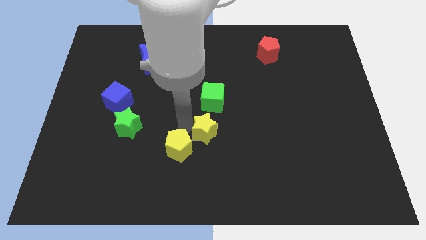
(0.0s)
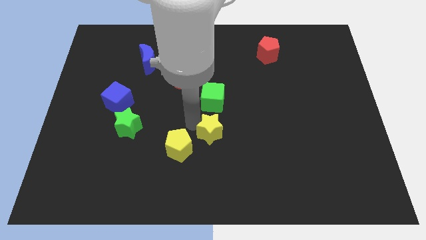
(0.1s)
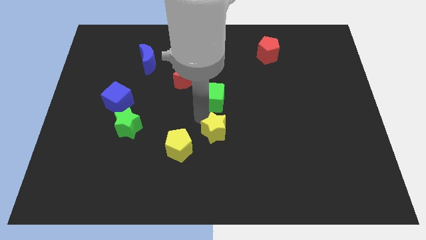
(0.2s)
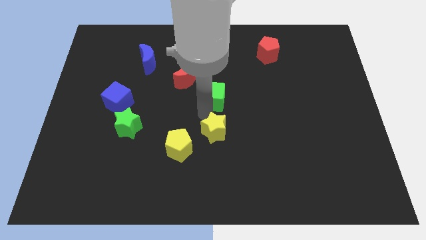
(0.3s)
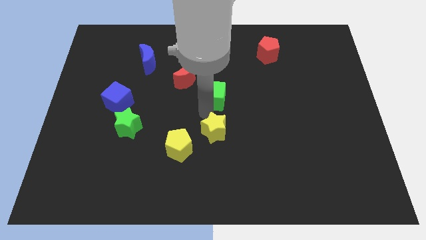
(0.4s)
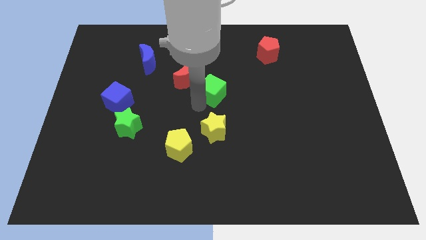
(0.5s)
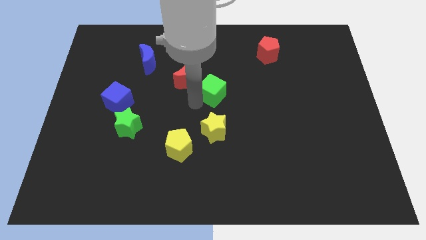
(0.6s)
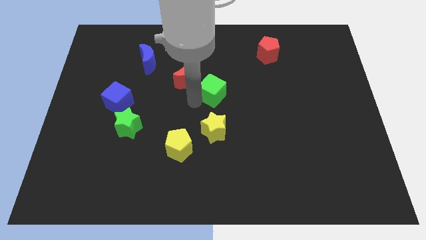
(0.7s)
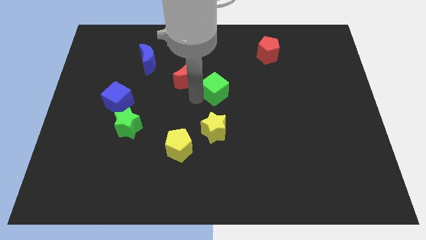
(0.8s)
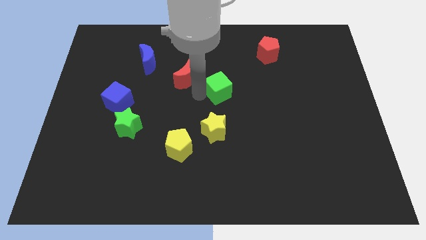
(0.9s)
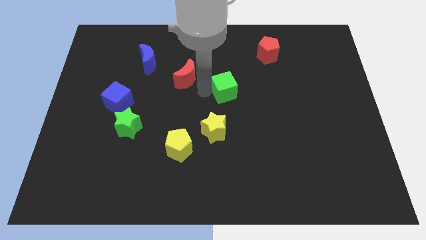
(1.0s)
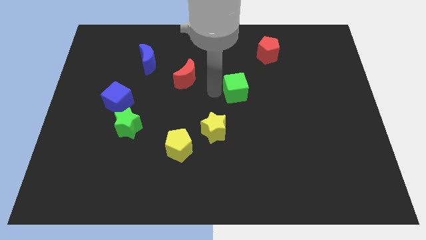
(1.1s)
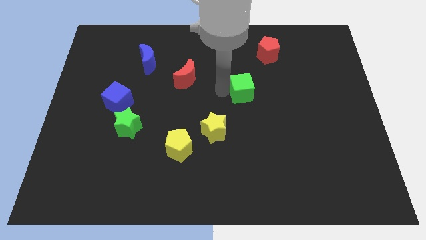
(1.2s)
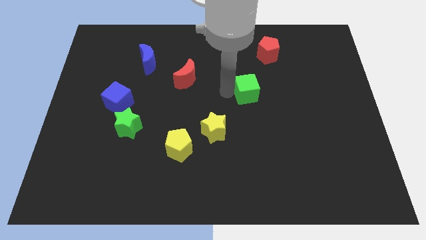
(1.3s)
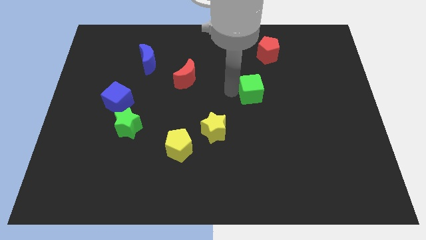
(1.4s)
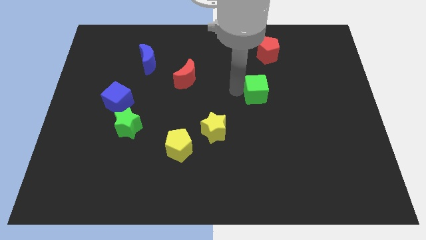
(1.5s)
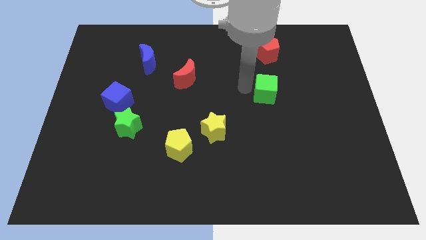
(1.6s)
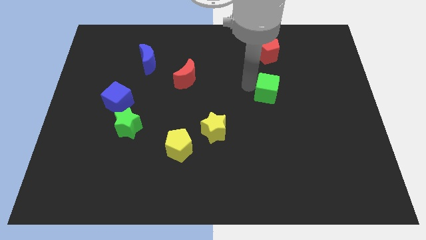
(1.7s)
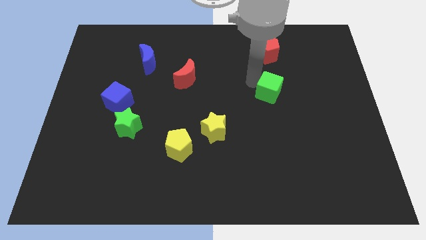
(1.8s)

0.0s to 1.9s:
put the green cube underneath the red pentagon

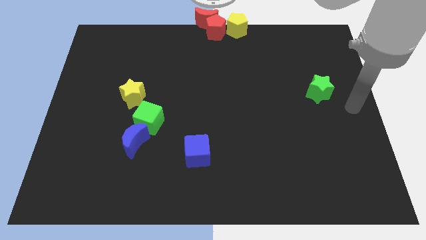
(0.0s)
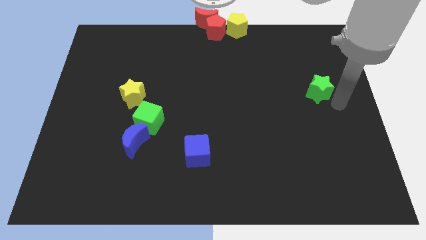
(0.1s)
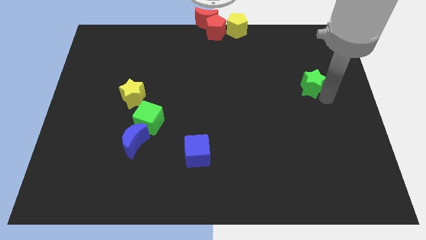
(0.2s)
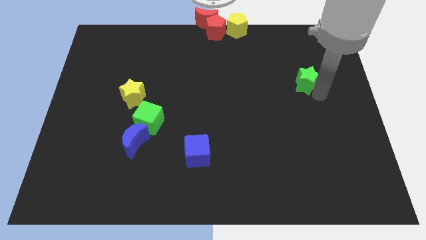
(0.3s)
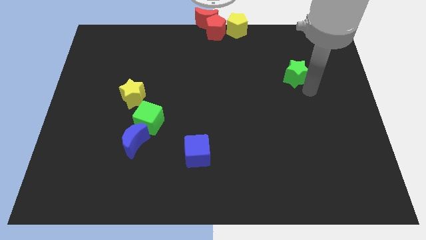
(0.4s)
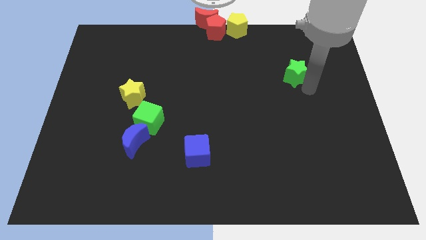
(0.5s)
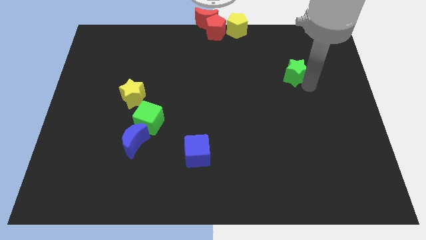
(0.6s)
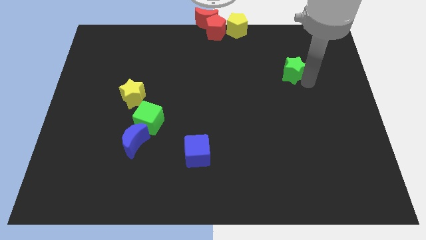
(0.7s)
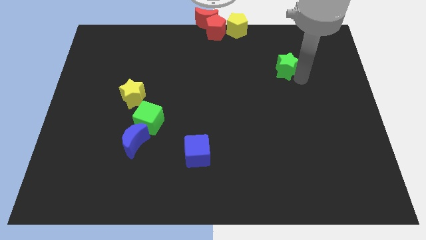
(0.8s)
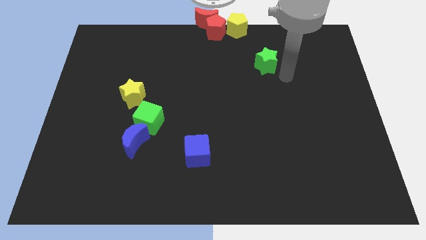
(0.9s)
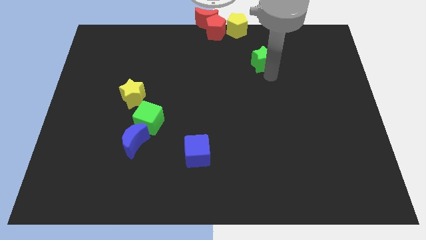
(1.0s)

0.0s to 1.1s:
move green star diagonally below the yellow pentagon

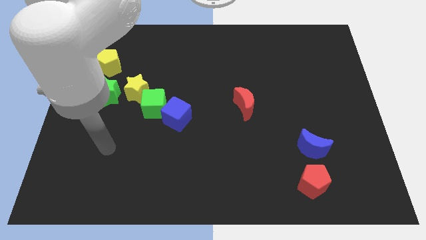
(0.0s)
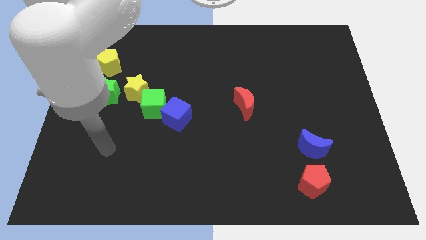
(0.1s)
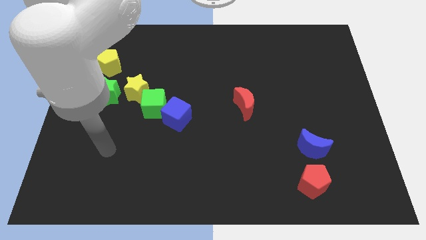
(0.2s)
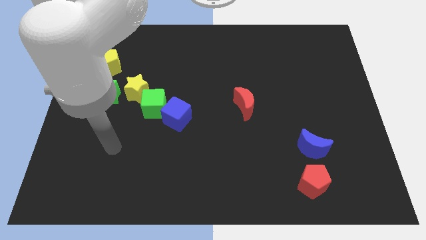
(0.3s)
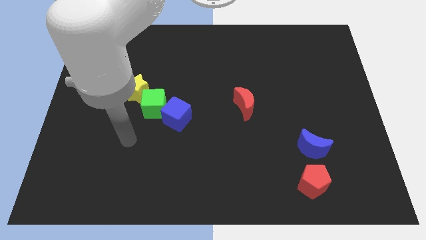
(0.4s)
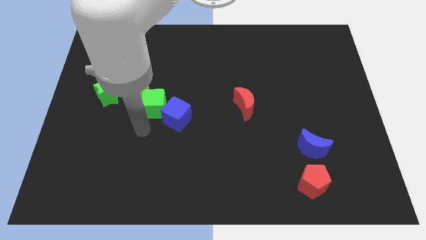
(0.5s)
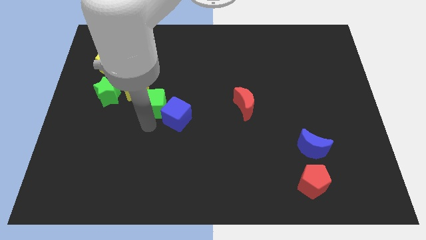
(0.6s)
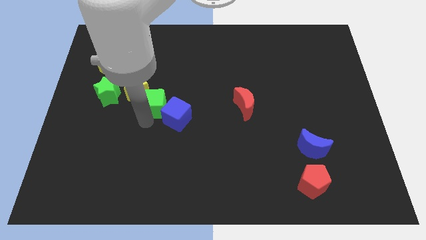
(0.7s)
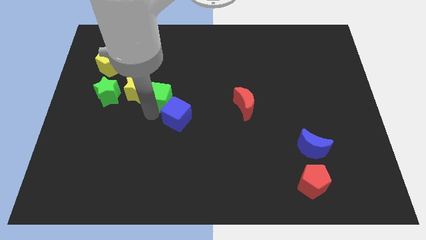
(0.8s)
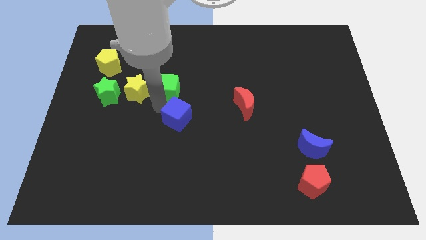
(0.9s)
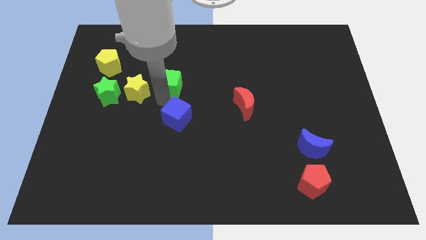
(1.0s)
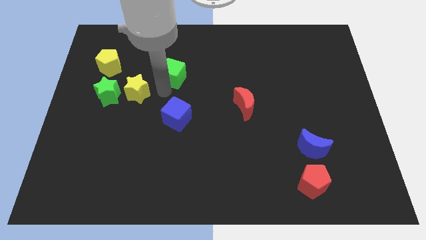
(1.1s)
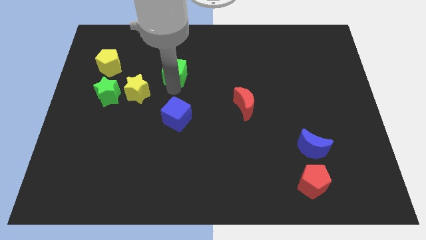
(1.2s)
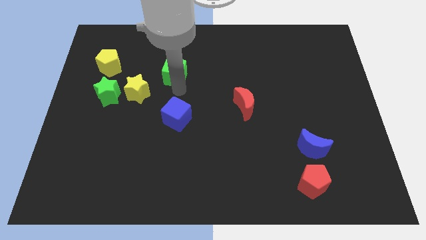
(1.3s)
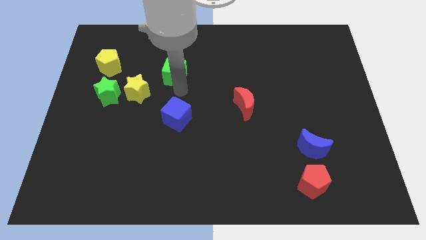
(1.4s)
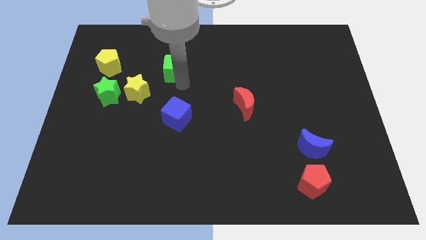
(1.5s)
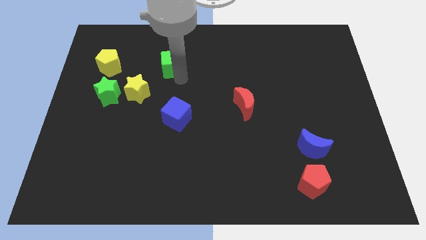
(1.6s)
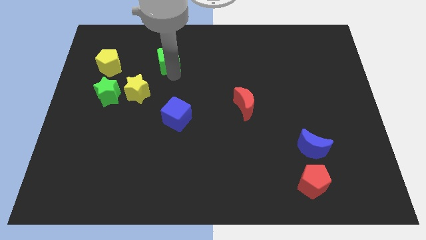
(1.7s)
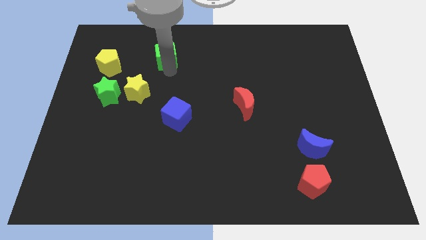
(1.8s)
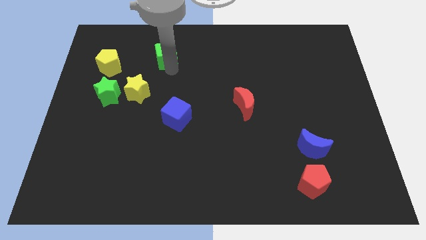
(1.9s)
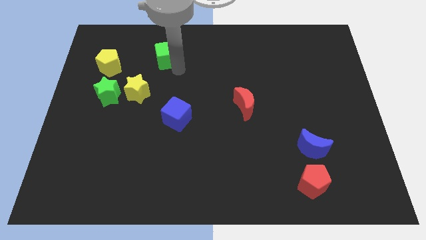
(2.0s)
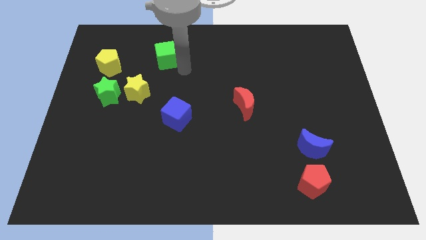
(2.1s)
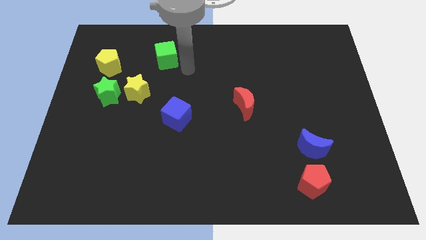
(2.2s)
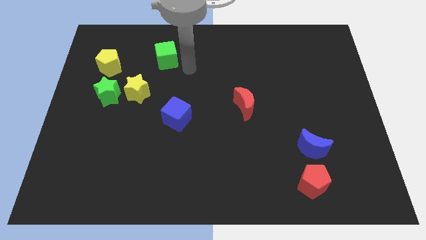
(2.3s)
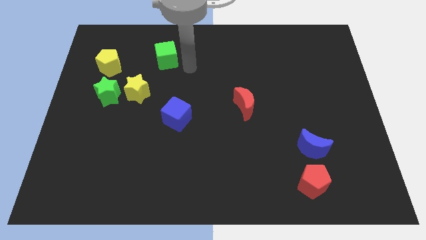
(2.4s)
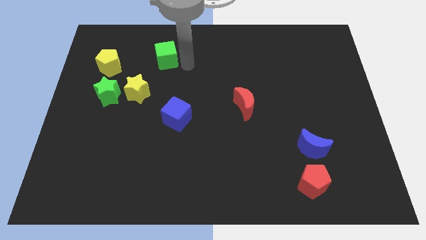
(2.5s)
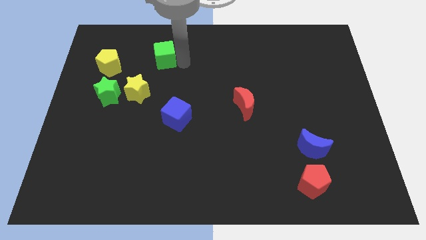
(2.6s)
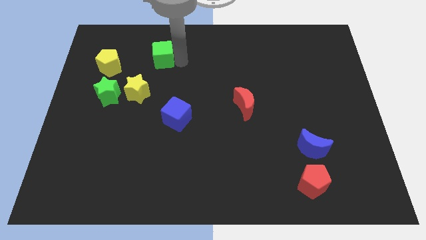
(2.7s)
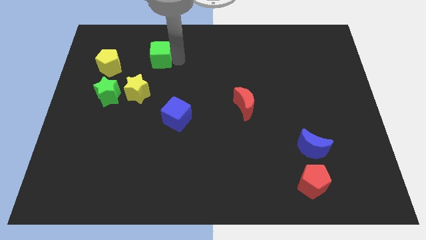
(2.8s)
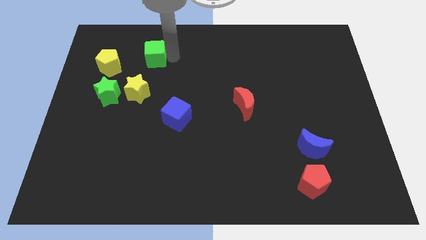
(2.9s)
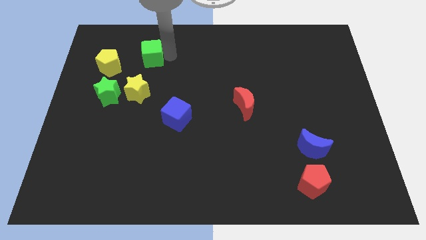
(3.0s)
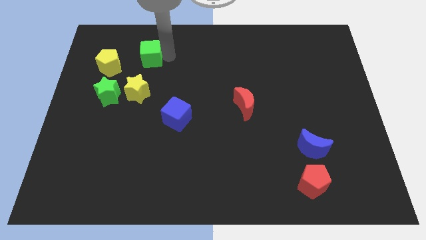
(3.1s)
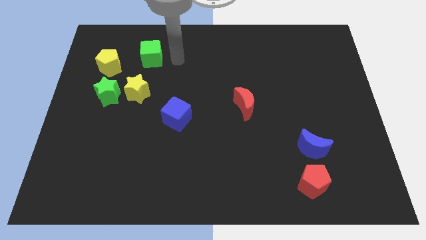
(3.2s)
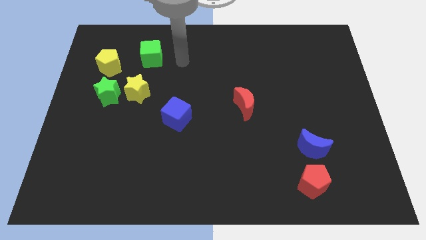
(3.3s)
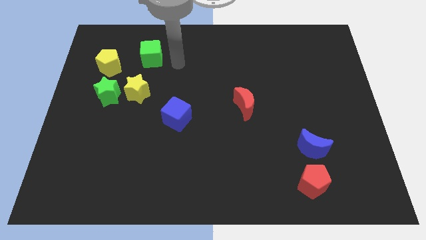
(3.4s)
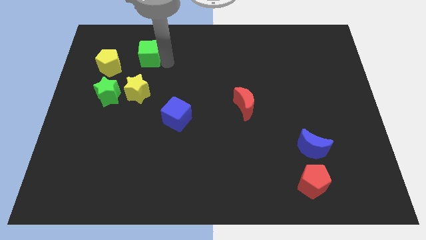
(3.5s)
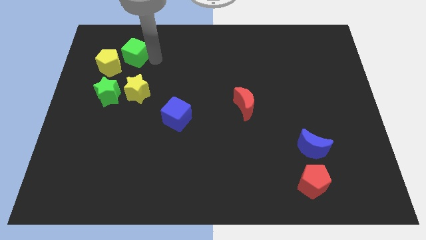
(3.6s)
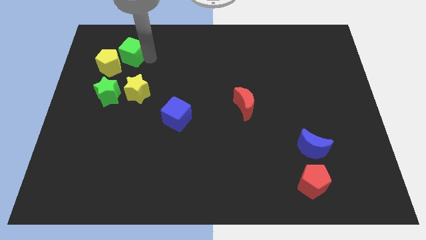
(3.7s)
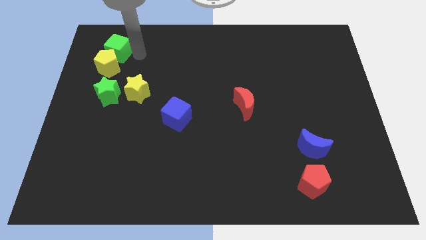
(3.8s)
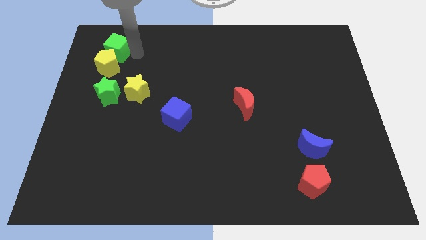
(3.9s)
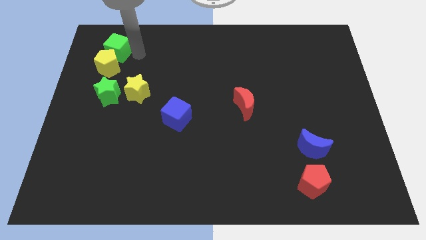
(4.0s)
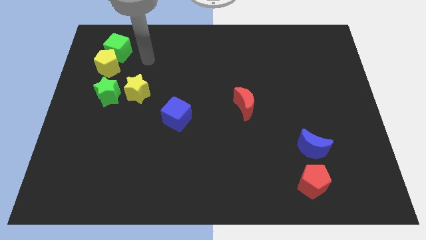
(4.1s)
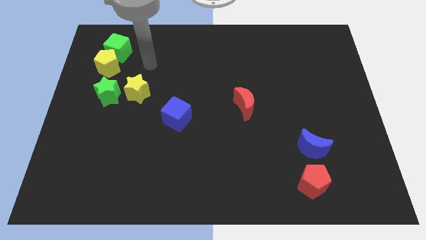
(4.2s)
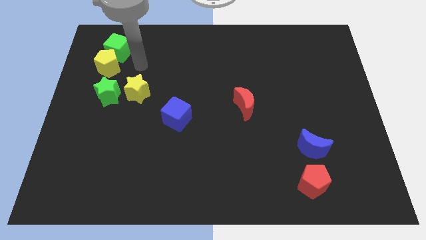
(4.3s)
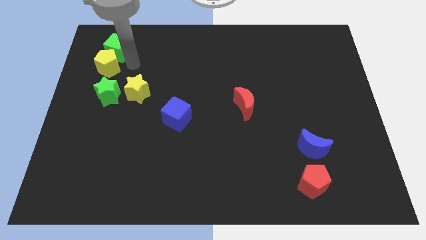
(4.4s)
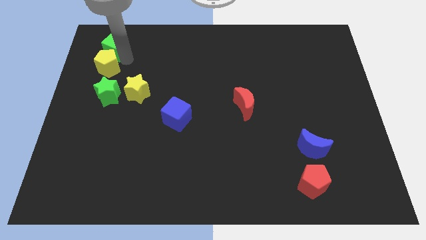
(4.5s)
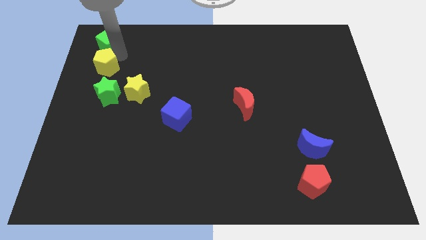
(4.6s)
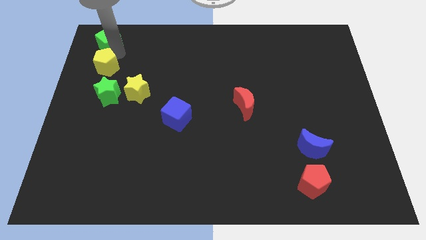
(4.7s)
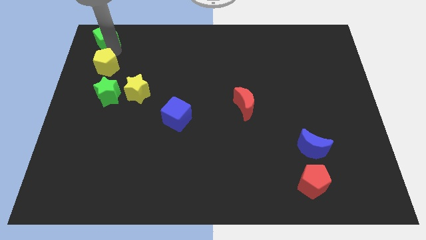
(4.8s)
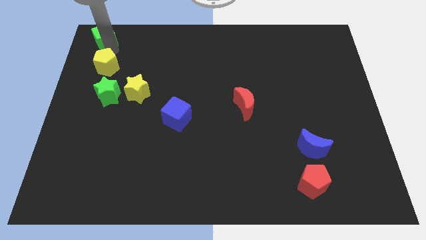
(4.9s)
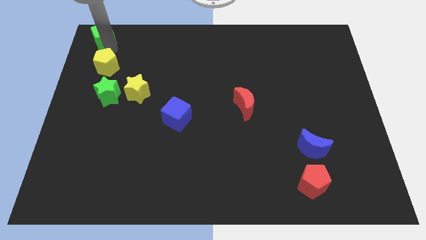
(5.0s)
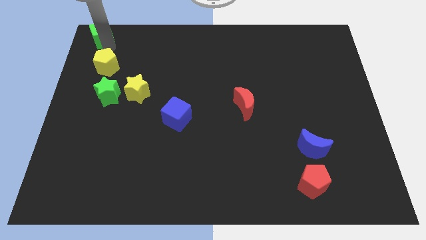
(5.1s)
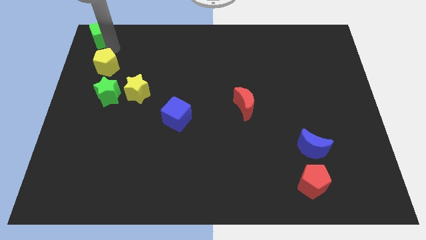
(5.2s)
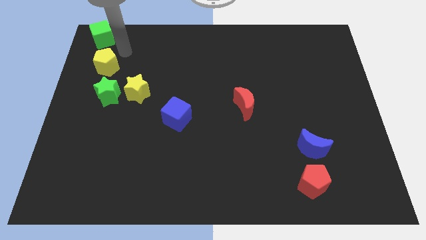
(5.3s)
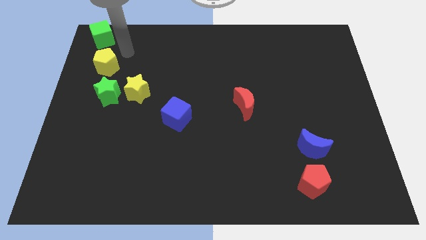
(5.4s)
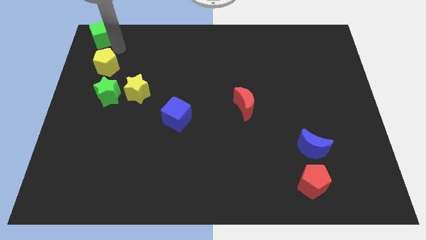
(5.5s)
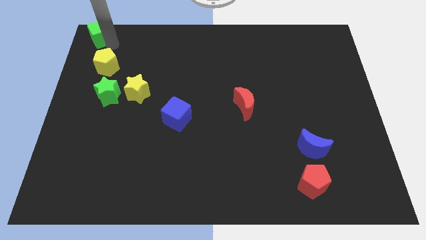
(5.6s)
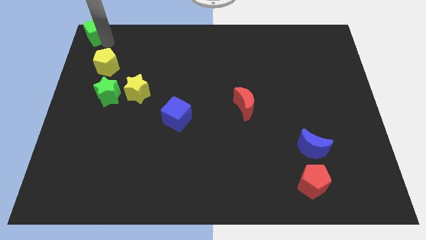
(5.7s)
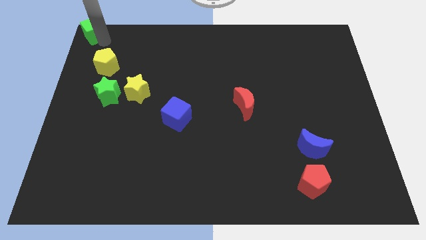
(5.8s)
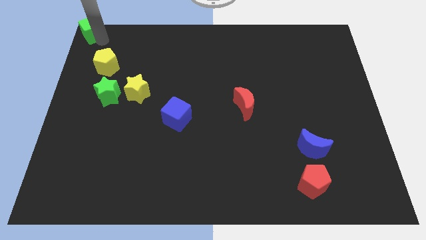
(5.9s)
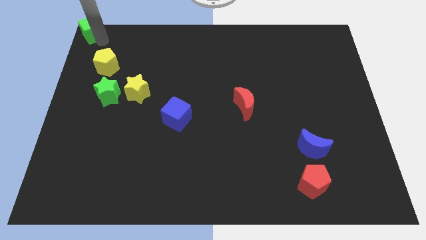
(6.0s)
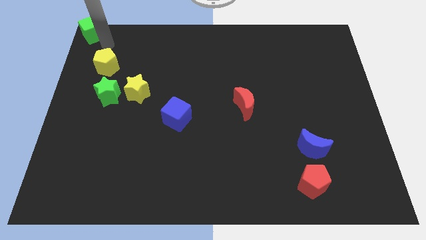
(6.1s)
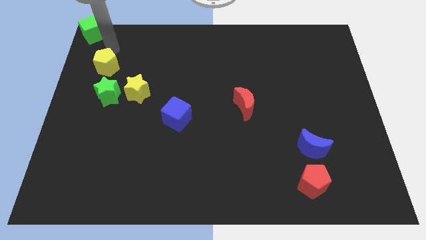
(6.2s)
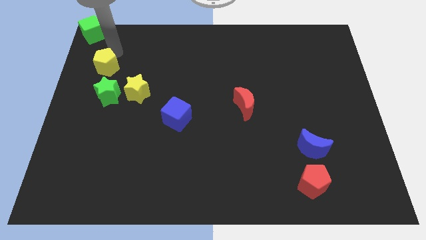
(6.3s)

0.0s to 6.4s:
place the green cube to the top left
